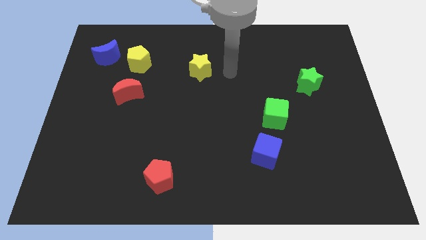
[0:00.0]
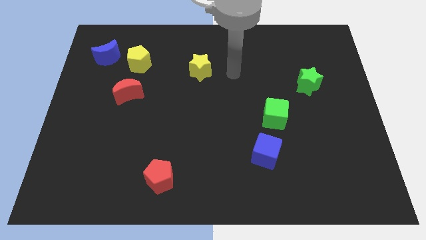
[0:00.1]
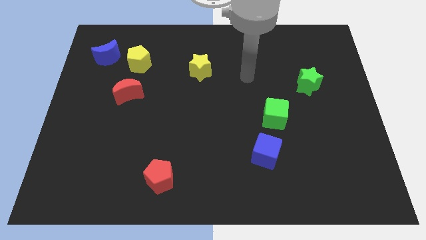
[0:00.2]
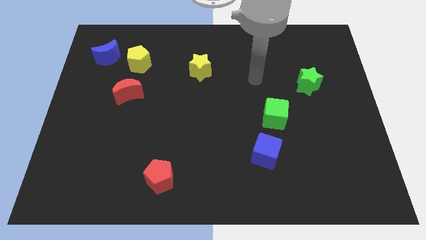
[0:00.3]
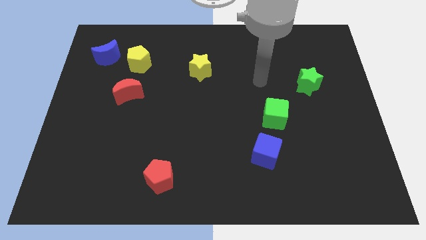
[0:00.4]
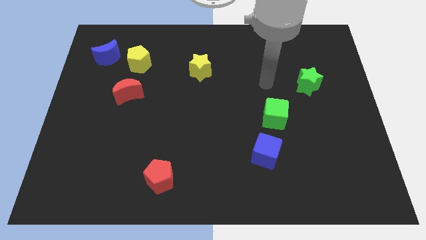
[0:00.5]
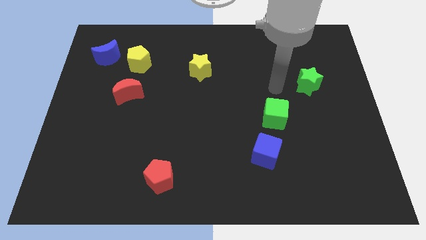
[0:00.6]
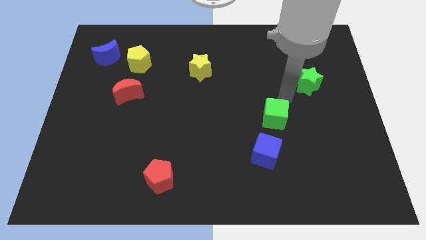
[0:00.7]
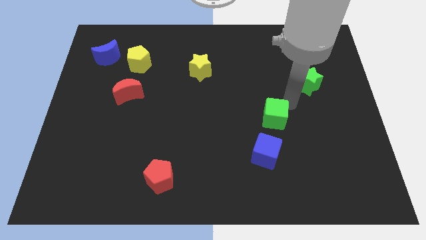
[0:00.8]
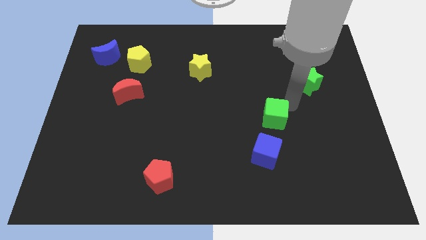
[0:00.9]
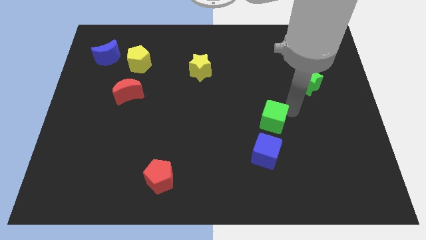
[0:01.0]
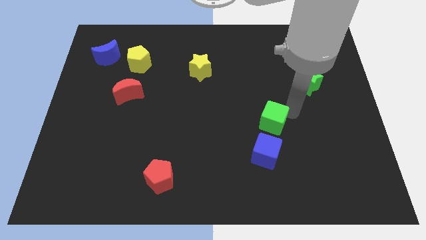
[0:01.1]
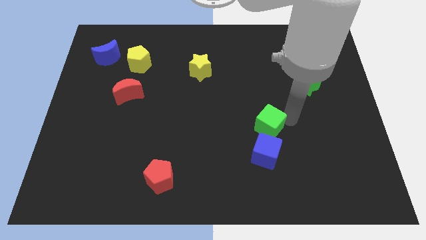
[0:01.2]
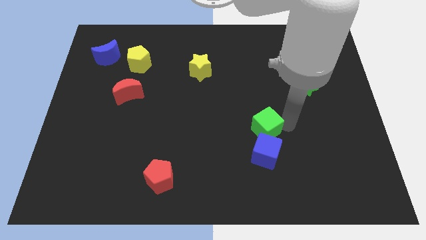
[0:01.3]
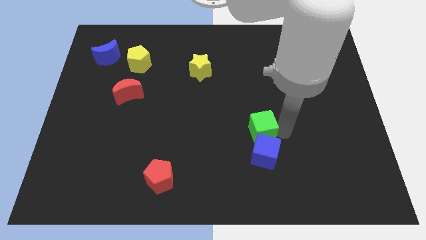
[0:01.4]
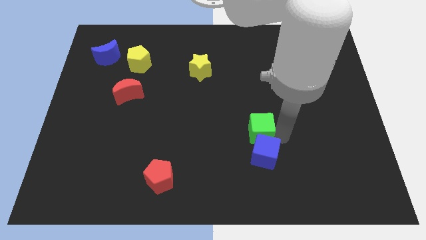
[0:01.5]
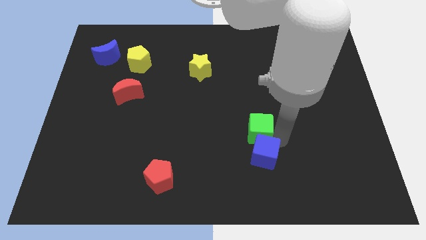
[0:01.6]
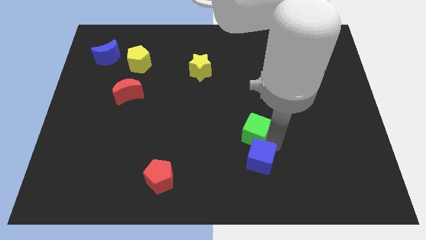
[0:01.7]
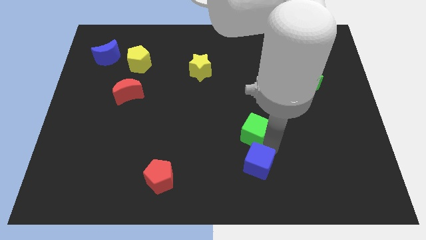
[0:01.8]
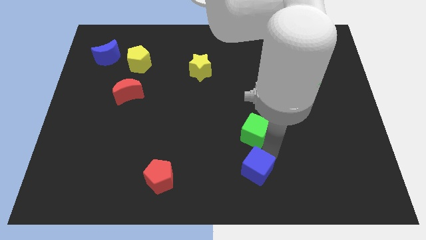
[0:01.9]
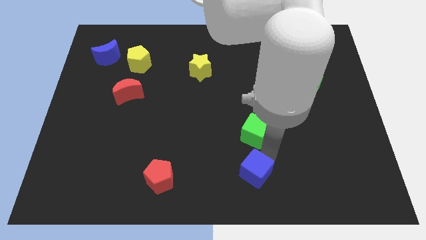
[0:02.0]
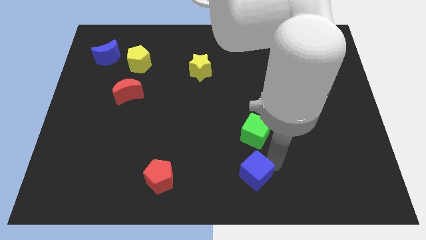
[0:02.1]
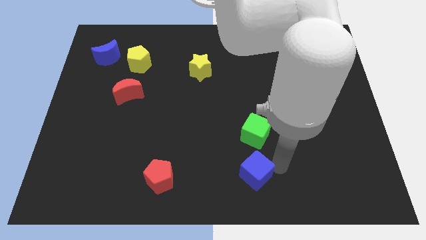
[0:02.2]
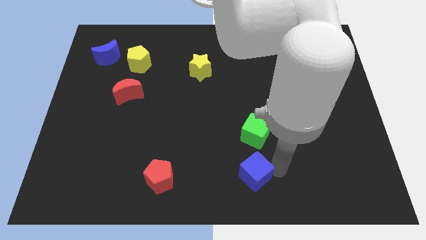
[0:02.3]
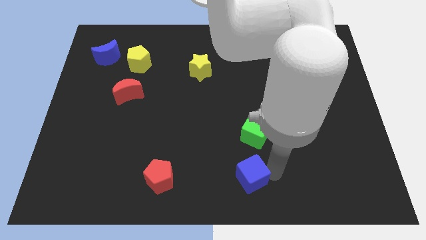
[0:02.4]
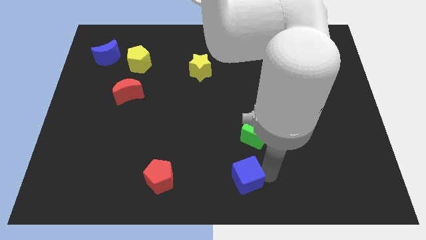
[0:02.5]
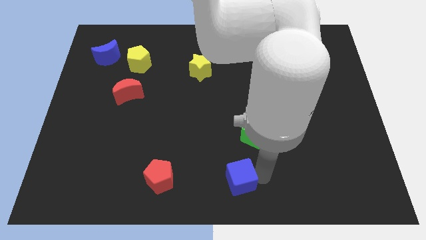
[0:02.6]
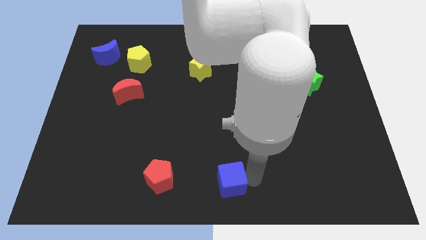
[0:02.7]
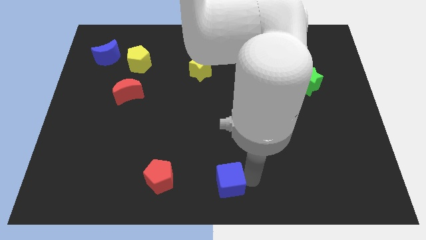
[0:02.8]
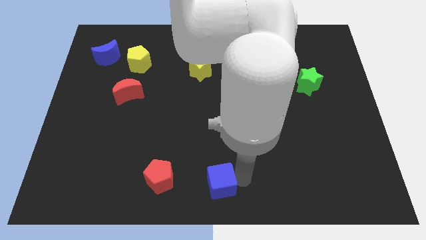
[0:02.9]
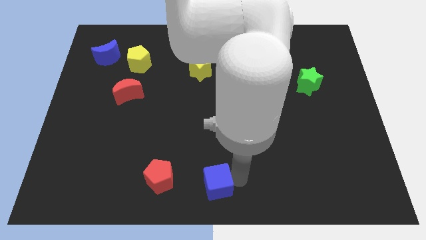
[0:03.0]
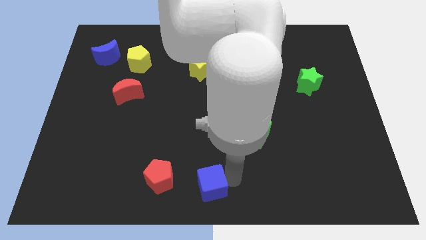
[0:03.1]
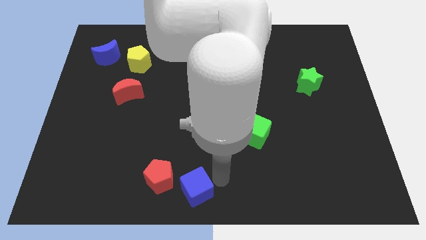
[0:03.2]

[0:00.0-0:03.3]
push the green cube and the blue cube towards the bottom of the board

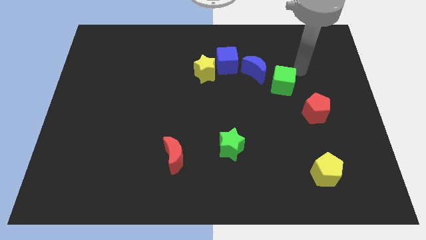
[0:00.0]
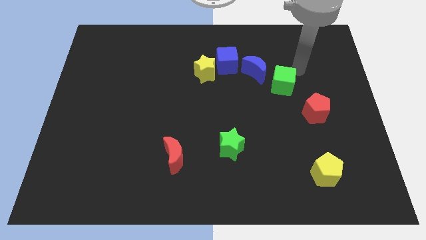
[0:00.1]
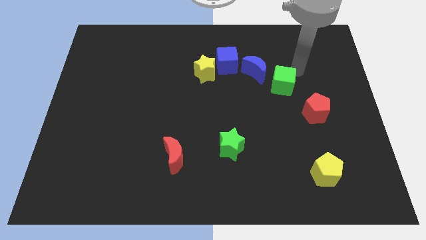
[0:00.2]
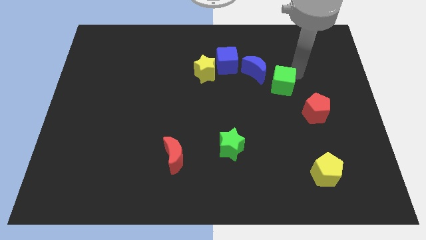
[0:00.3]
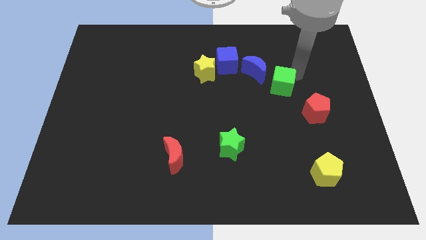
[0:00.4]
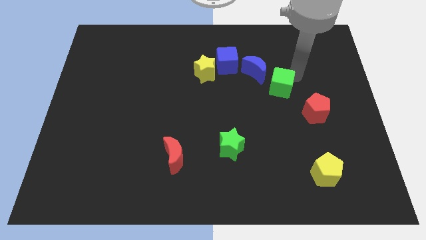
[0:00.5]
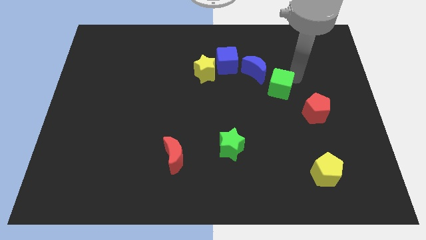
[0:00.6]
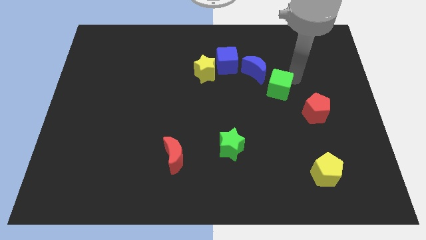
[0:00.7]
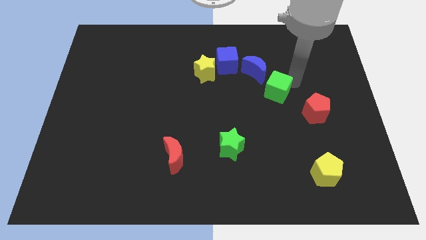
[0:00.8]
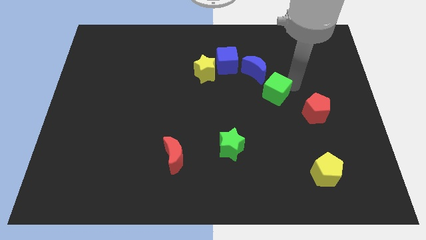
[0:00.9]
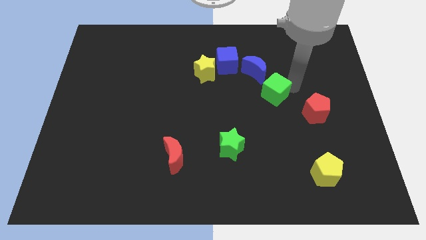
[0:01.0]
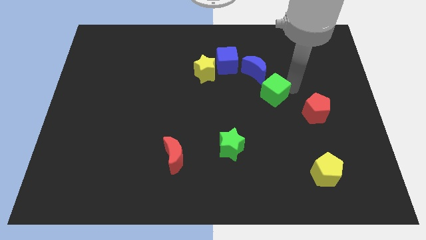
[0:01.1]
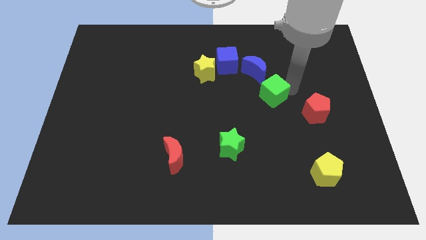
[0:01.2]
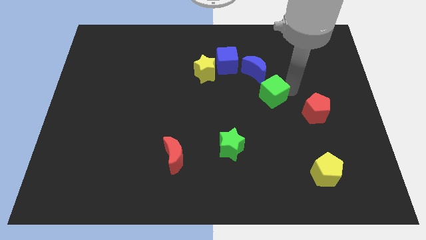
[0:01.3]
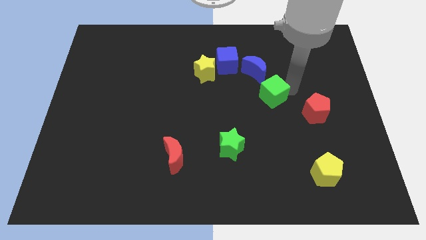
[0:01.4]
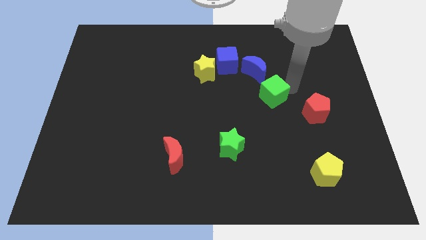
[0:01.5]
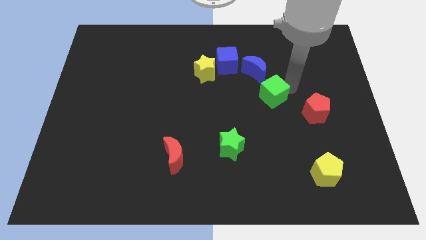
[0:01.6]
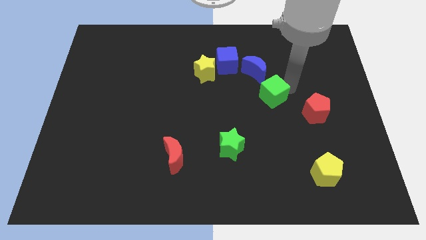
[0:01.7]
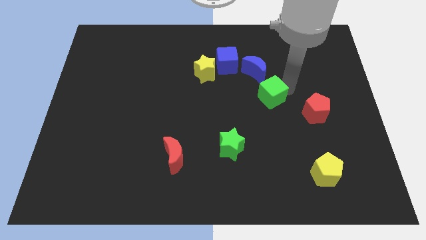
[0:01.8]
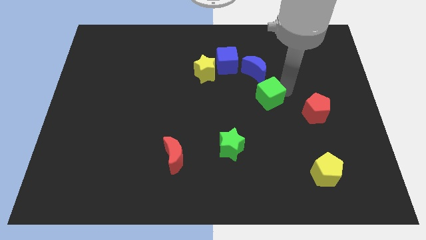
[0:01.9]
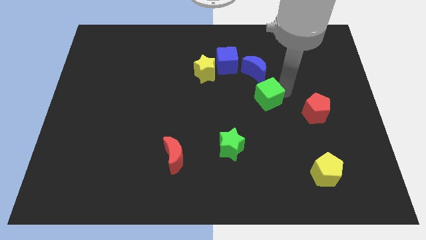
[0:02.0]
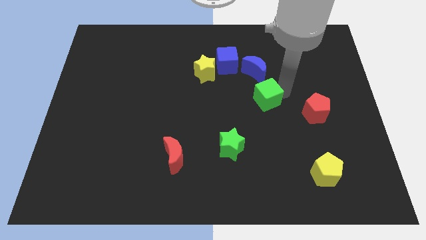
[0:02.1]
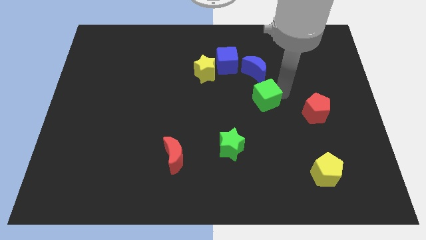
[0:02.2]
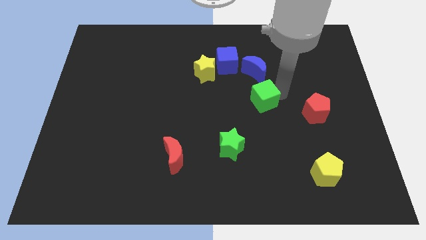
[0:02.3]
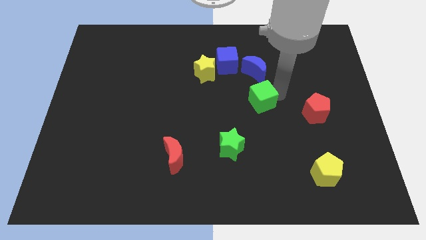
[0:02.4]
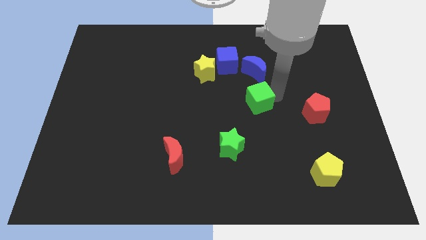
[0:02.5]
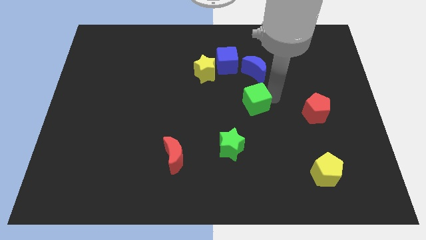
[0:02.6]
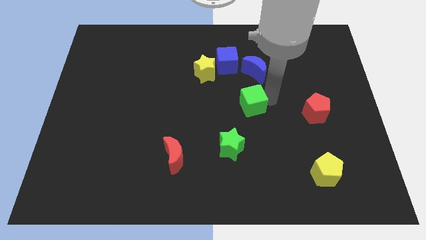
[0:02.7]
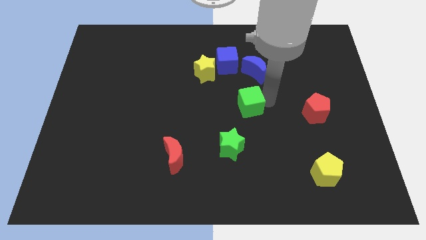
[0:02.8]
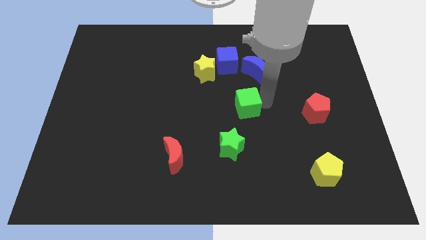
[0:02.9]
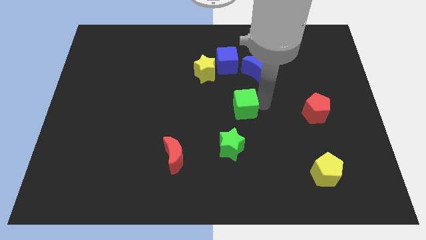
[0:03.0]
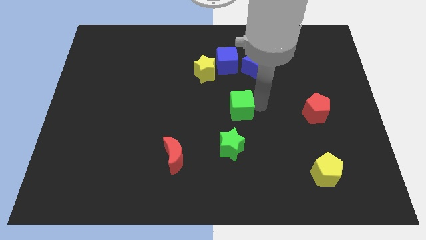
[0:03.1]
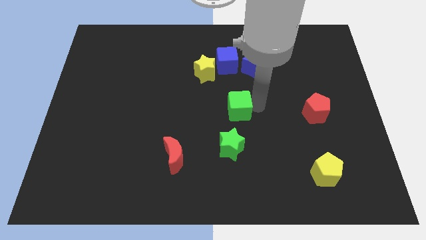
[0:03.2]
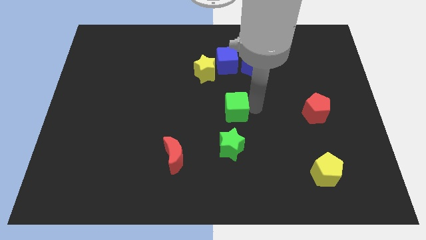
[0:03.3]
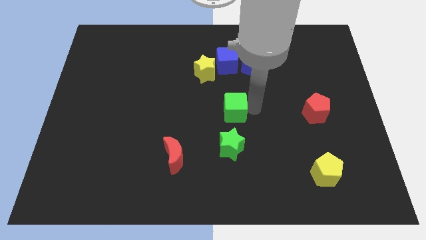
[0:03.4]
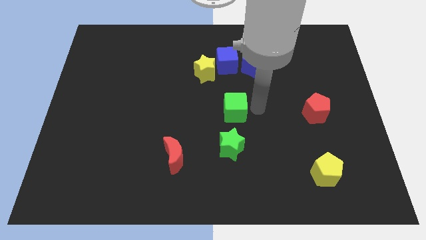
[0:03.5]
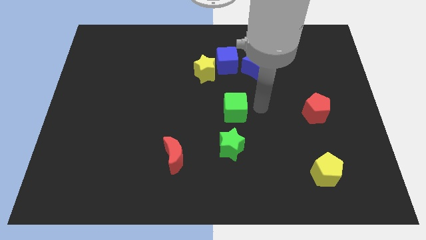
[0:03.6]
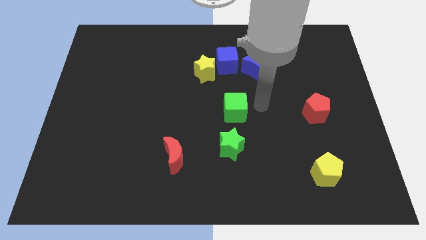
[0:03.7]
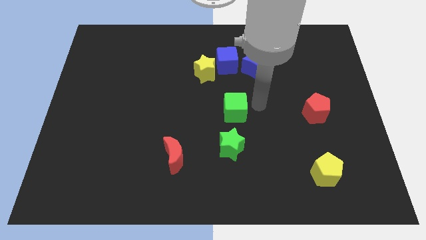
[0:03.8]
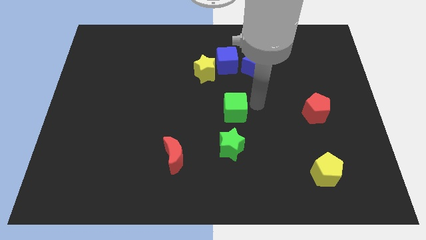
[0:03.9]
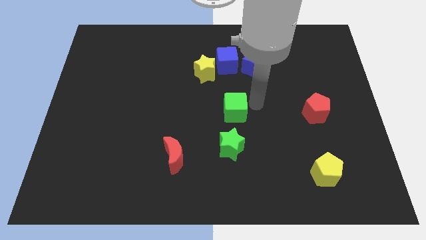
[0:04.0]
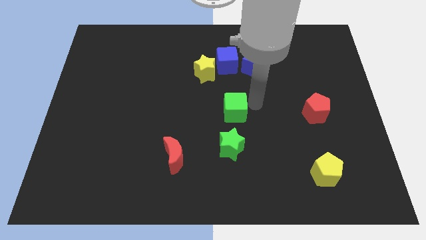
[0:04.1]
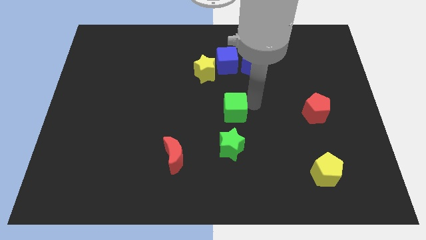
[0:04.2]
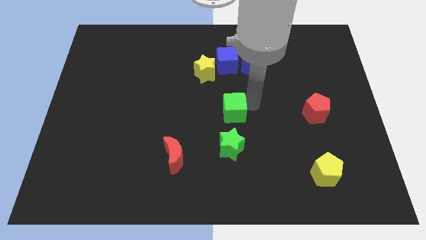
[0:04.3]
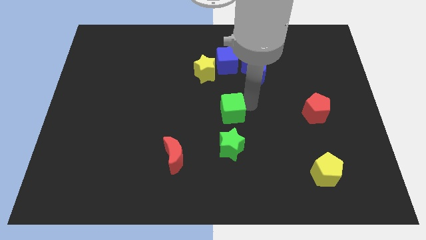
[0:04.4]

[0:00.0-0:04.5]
push the green cube to the center of the board

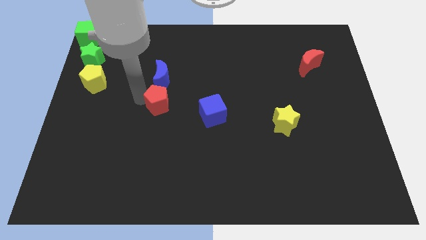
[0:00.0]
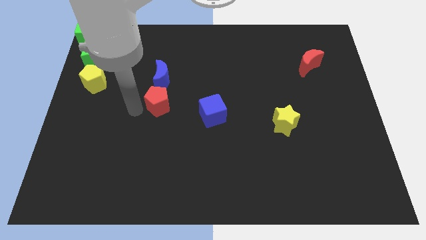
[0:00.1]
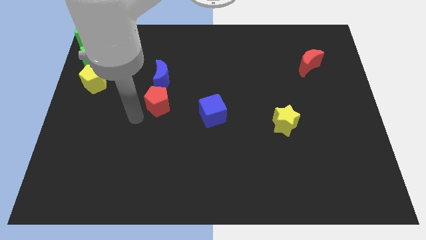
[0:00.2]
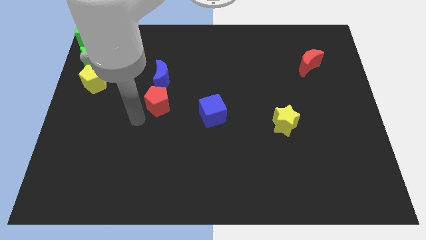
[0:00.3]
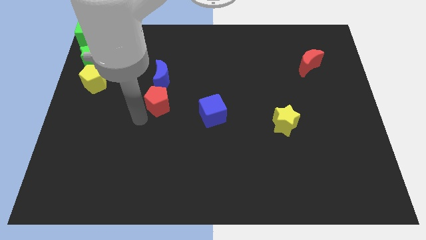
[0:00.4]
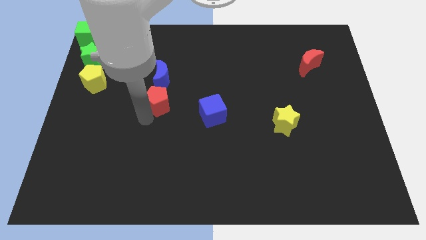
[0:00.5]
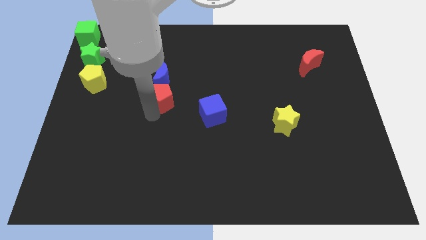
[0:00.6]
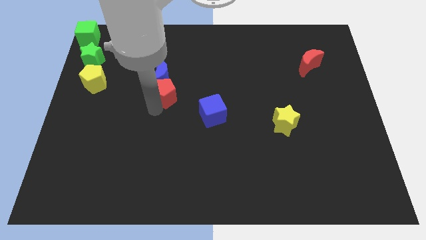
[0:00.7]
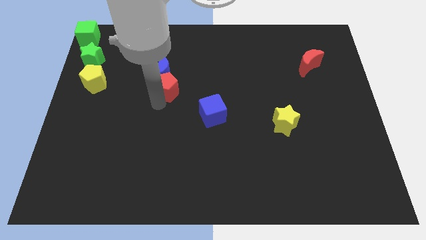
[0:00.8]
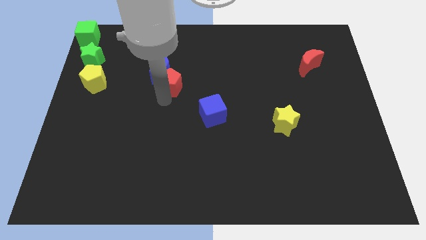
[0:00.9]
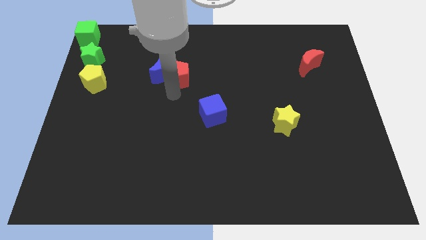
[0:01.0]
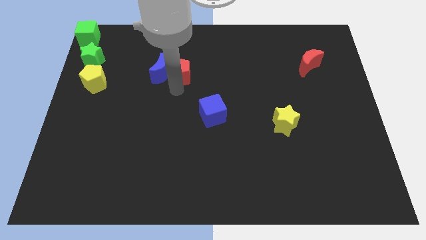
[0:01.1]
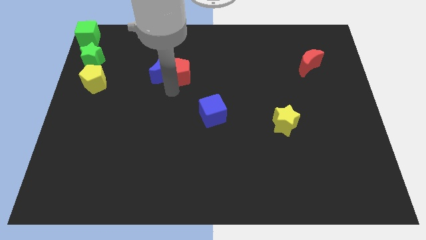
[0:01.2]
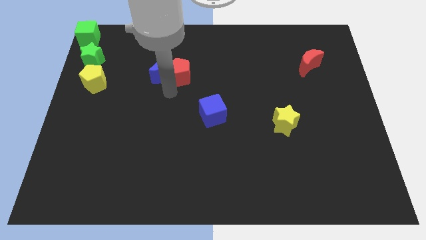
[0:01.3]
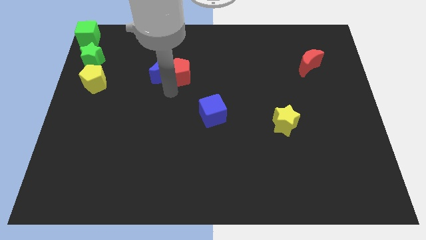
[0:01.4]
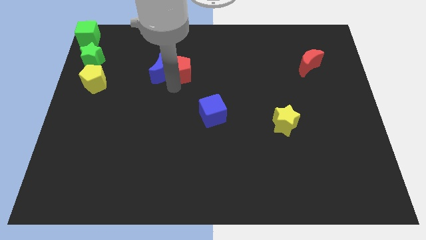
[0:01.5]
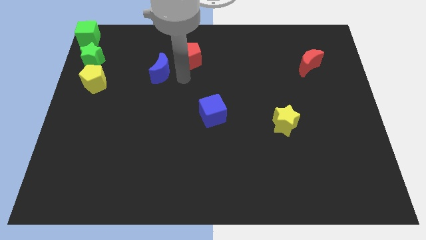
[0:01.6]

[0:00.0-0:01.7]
put the red pentagon to the right of the blue crescent
